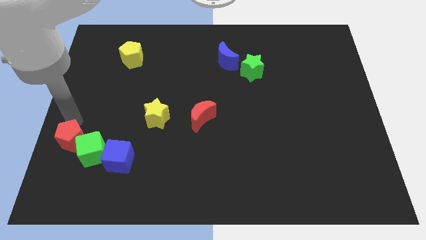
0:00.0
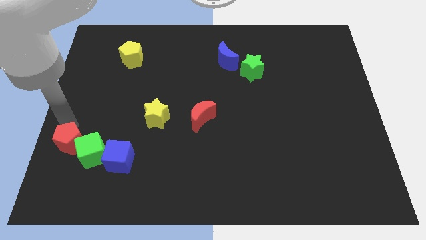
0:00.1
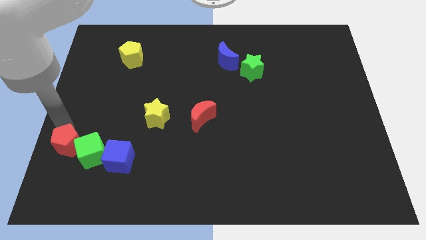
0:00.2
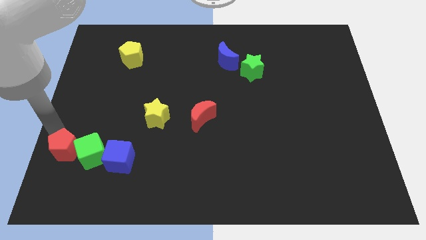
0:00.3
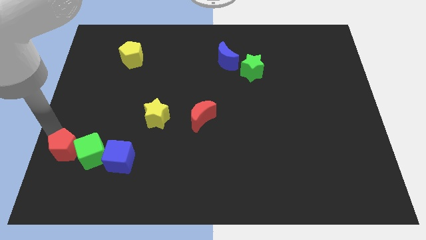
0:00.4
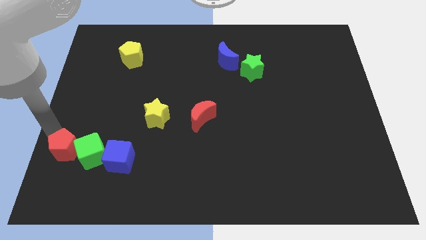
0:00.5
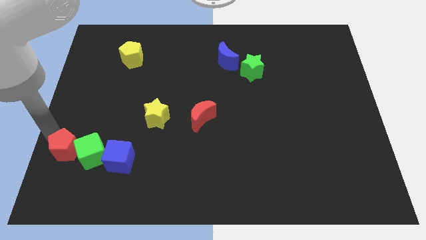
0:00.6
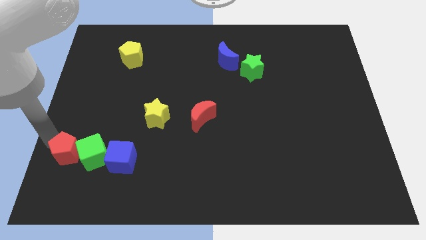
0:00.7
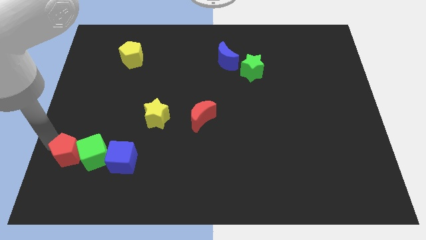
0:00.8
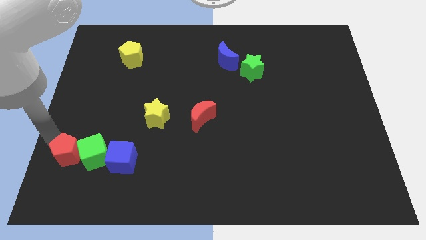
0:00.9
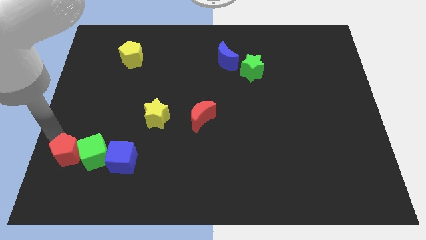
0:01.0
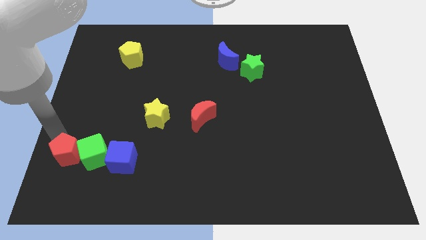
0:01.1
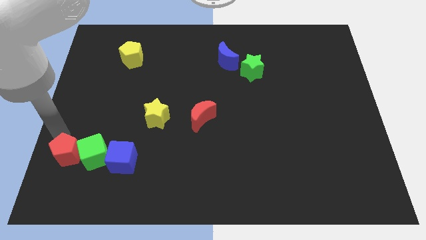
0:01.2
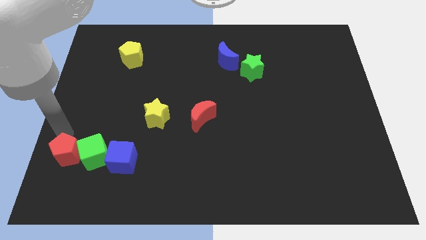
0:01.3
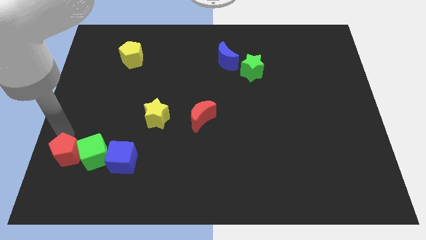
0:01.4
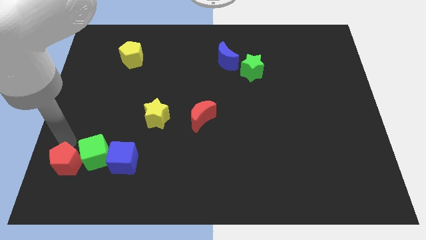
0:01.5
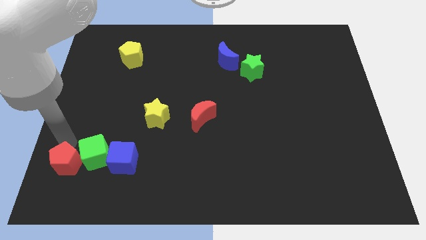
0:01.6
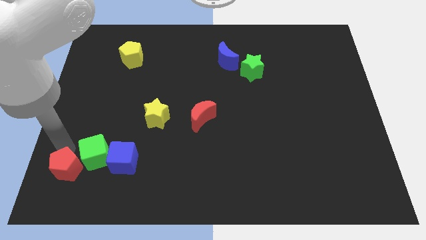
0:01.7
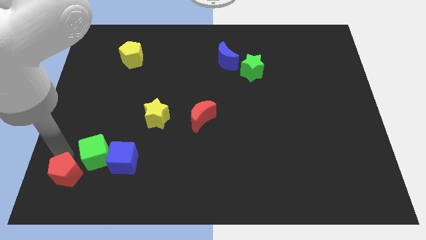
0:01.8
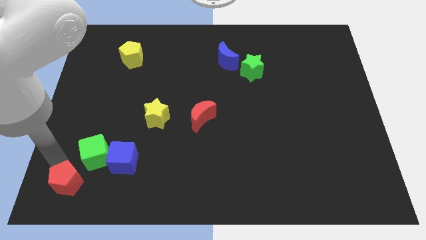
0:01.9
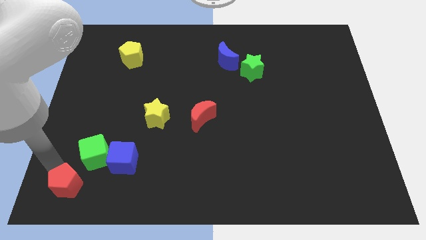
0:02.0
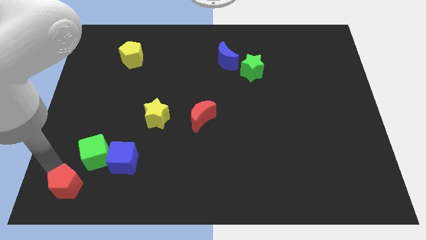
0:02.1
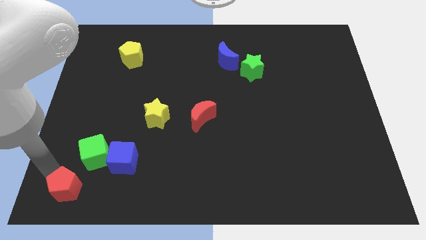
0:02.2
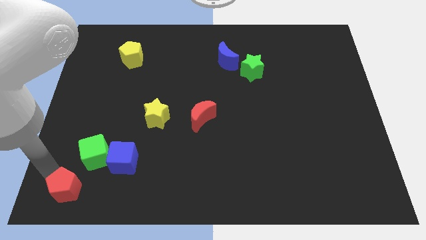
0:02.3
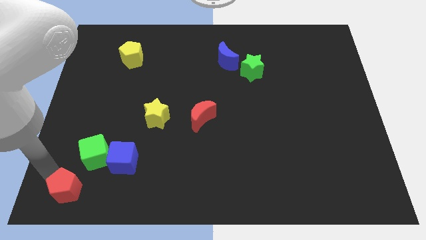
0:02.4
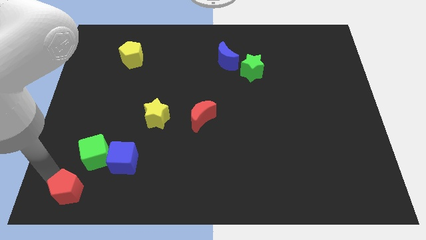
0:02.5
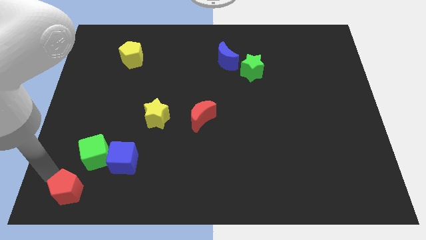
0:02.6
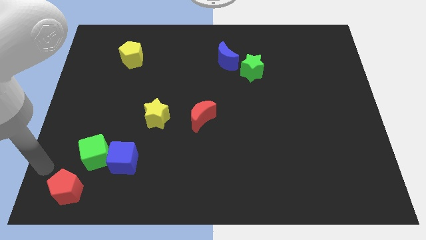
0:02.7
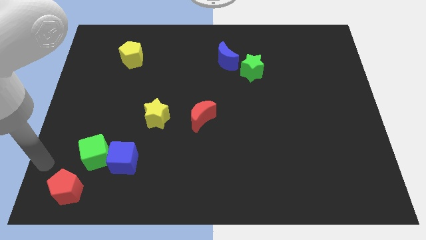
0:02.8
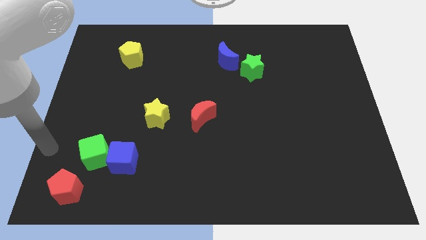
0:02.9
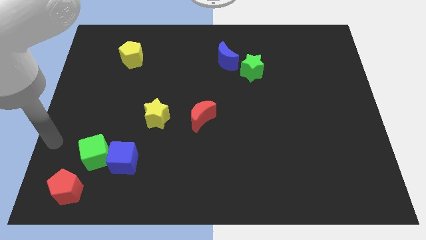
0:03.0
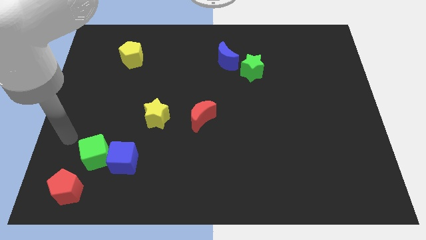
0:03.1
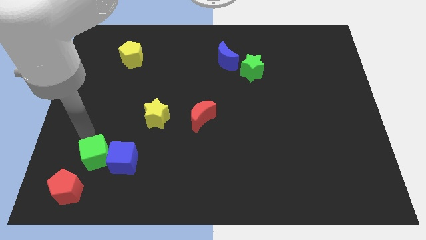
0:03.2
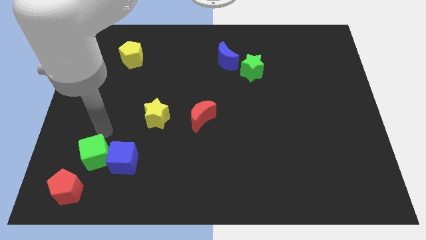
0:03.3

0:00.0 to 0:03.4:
move red pentagon to the bottom left corner of the board

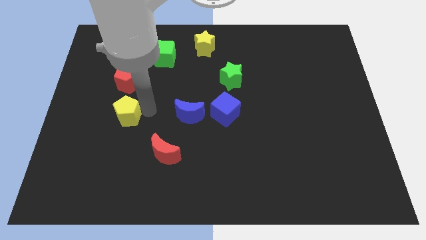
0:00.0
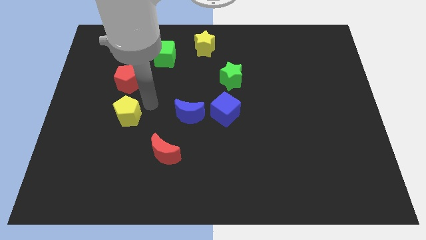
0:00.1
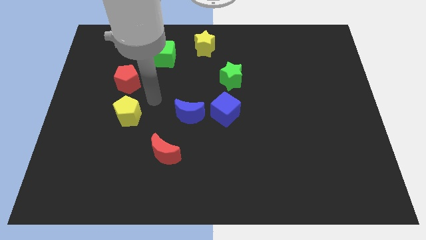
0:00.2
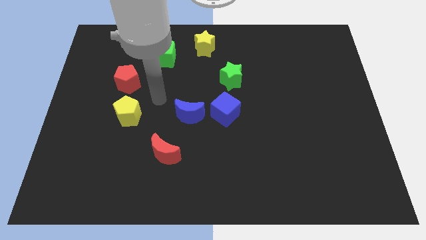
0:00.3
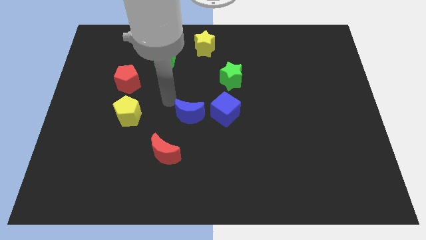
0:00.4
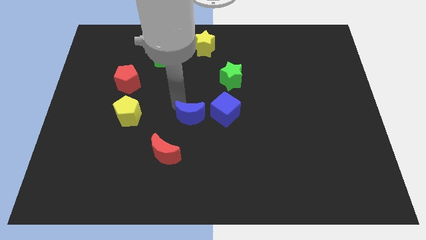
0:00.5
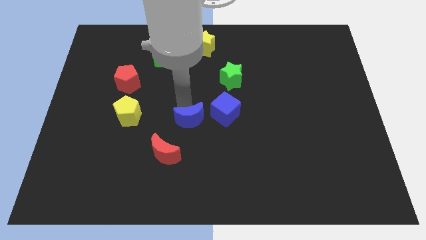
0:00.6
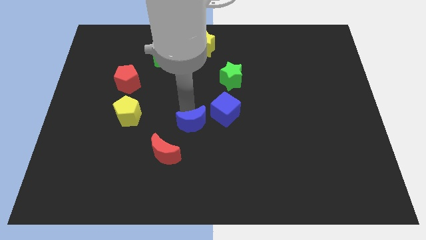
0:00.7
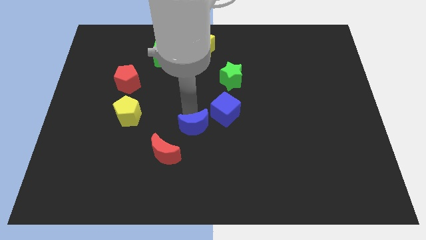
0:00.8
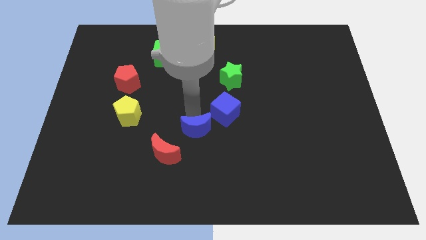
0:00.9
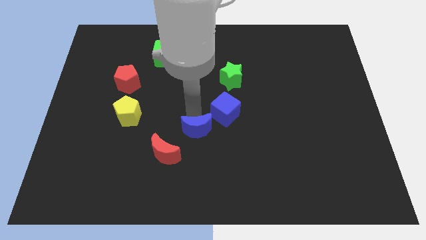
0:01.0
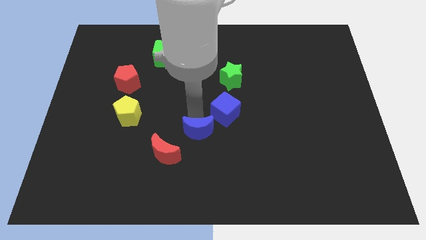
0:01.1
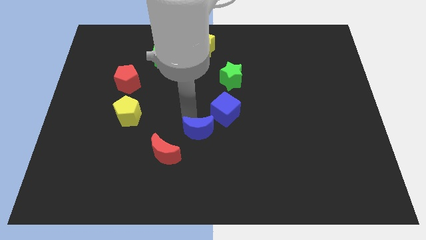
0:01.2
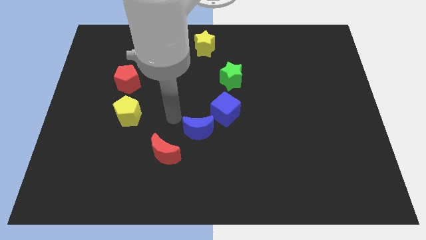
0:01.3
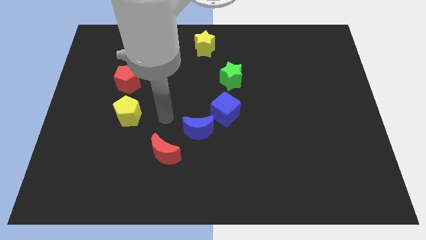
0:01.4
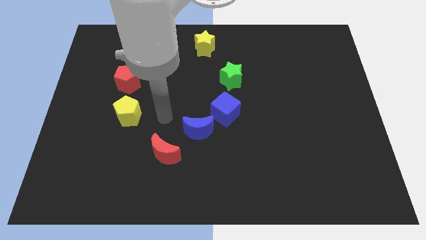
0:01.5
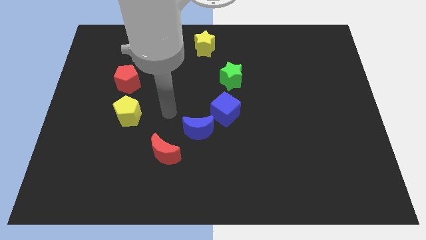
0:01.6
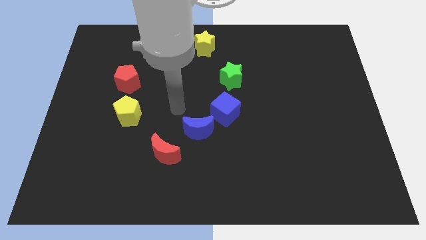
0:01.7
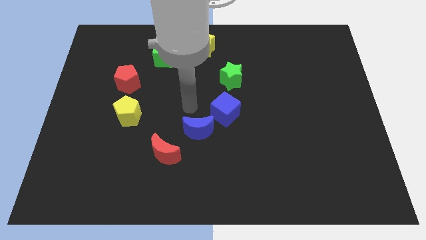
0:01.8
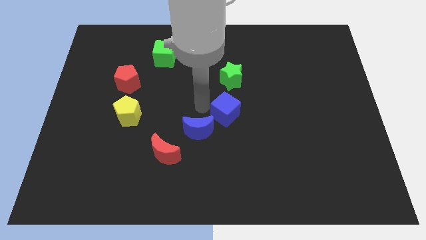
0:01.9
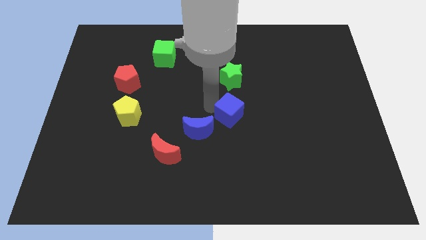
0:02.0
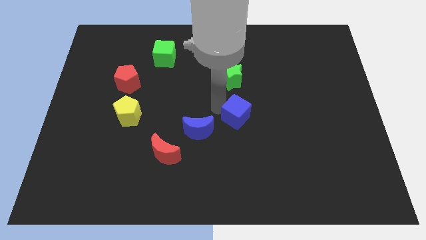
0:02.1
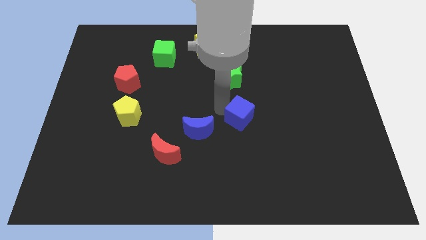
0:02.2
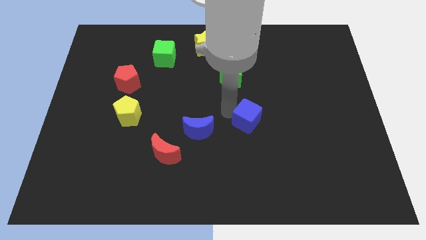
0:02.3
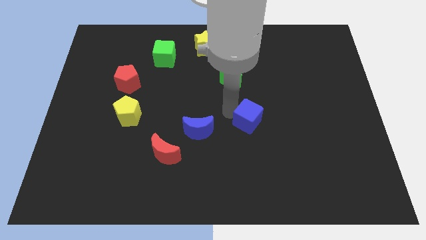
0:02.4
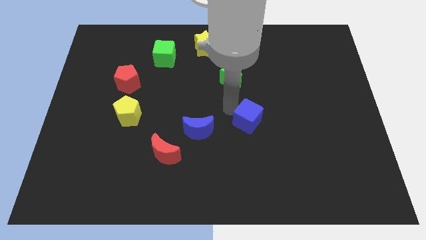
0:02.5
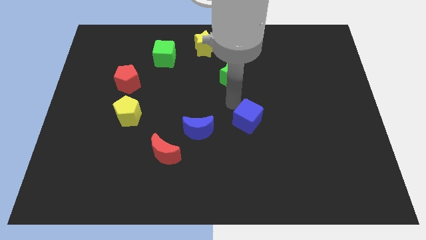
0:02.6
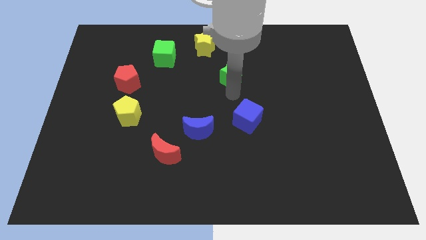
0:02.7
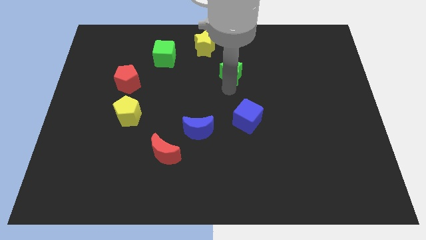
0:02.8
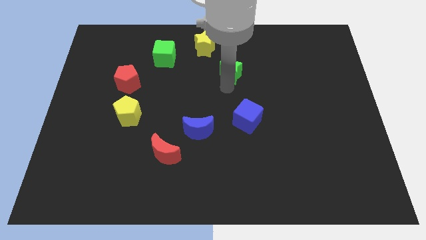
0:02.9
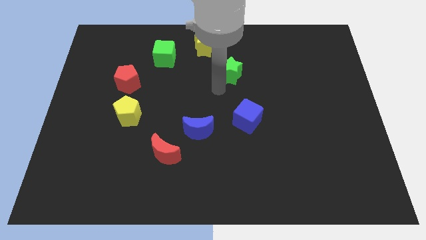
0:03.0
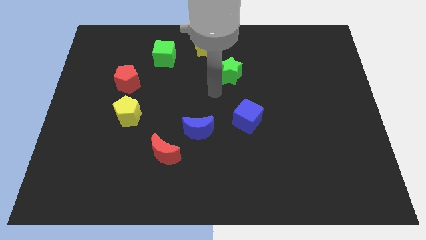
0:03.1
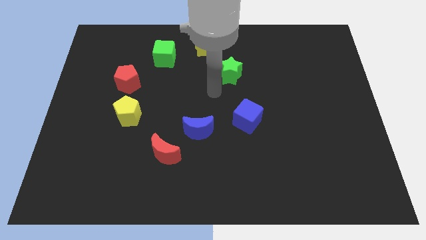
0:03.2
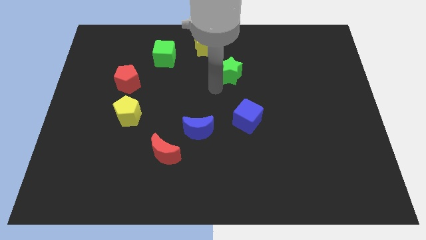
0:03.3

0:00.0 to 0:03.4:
push the blue blocks slightly to the bottom

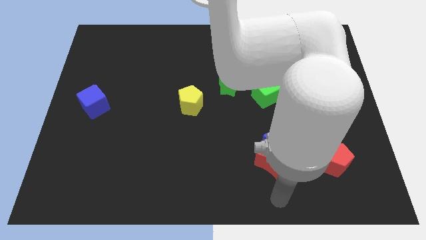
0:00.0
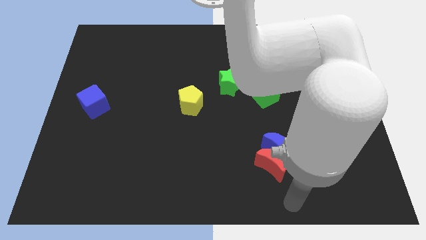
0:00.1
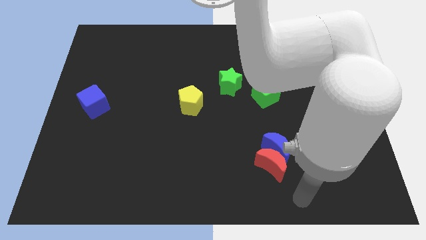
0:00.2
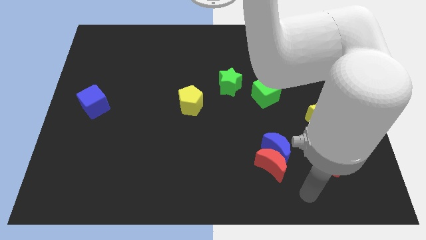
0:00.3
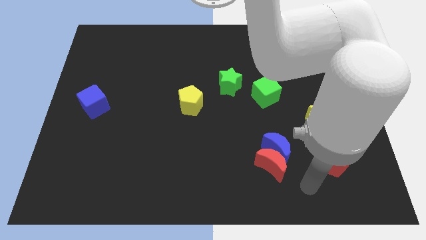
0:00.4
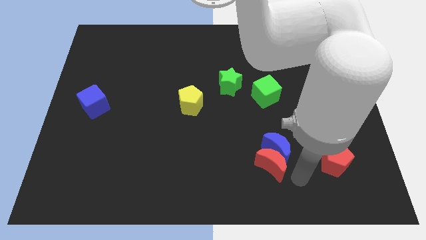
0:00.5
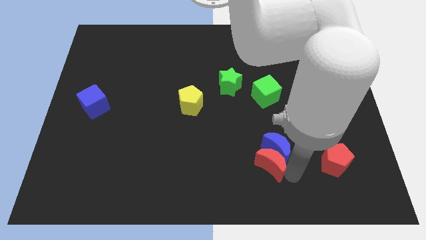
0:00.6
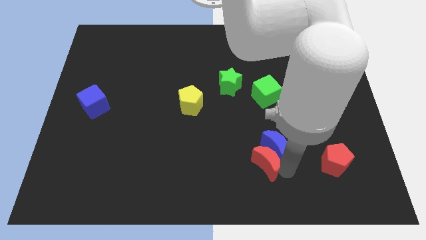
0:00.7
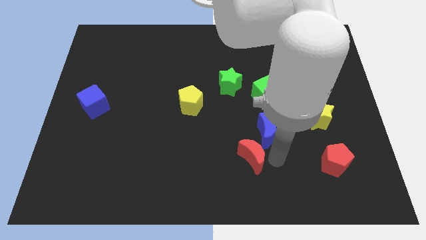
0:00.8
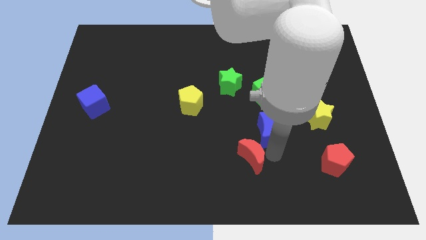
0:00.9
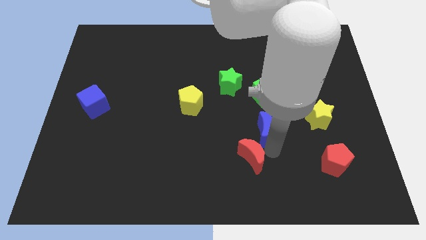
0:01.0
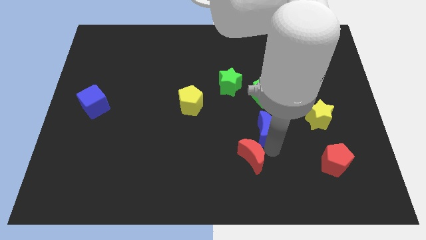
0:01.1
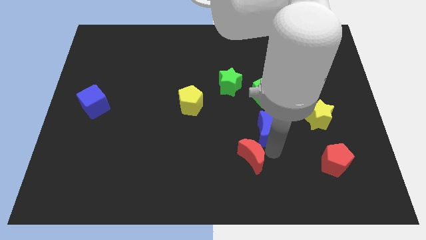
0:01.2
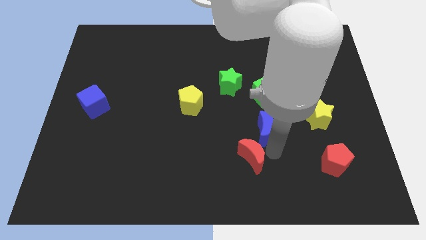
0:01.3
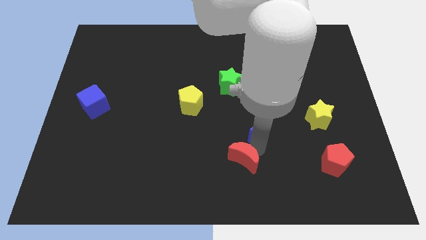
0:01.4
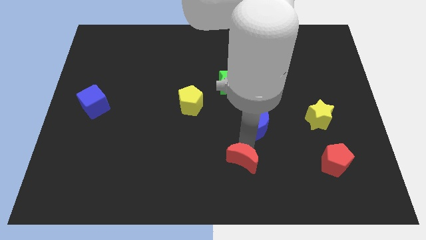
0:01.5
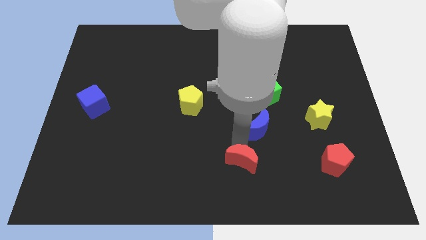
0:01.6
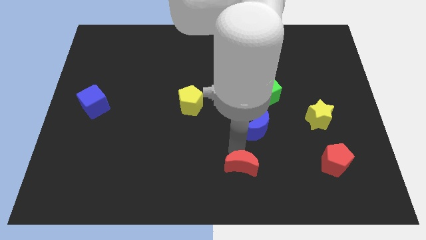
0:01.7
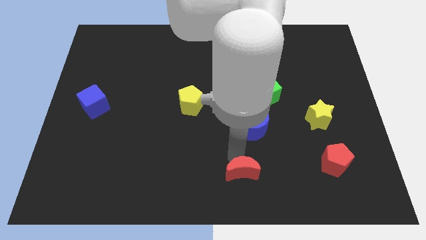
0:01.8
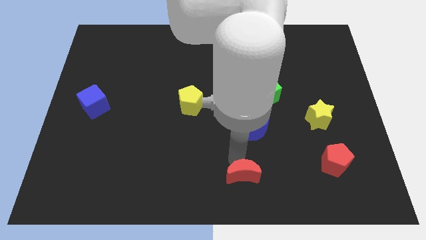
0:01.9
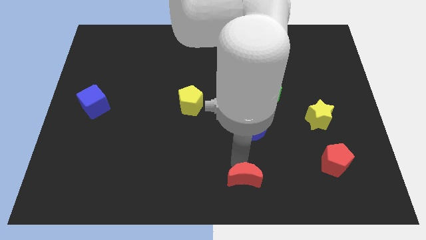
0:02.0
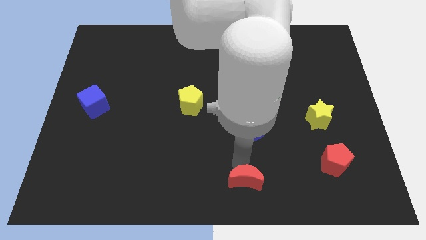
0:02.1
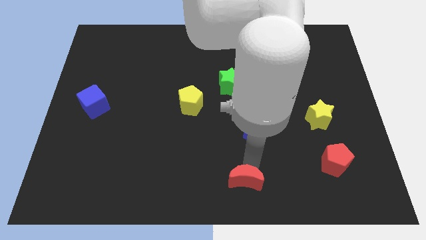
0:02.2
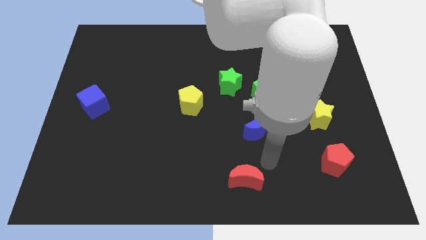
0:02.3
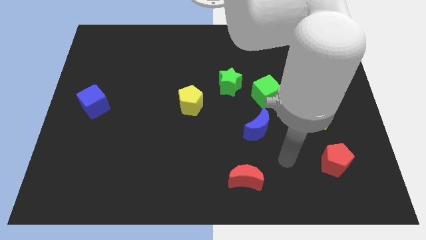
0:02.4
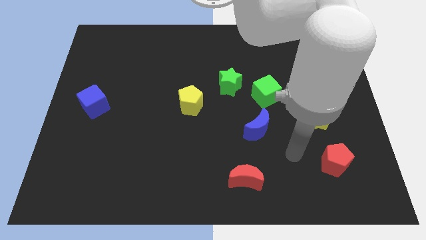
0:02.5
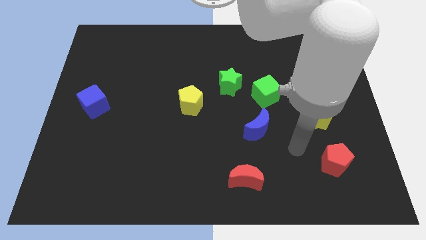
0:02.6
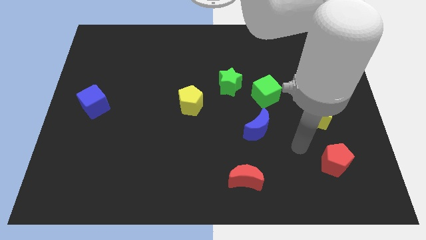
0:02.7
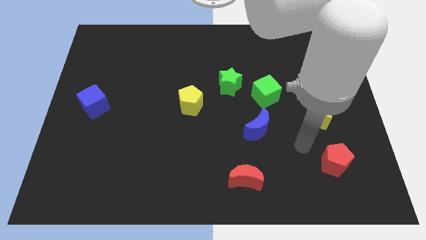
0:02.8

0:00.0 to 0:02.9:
push the red crescent towards the bottom of the board
